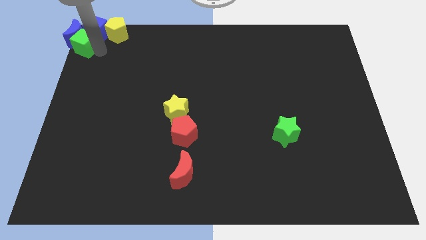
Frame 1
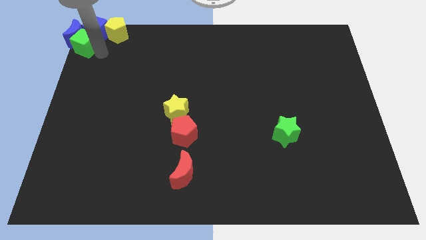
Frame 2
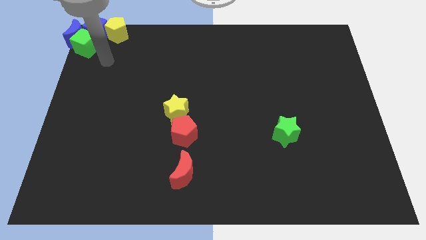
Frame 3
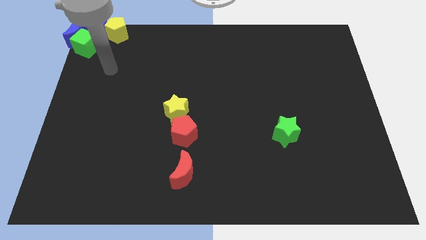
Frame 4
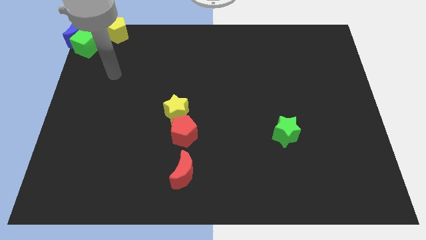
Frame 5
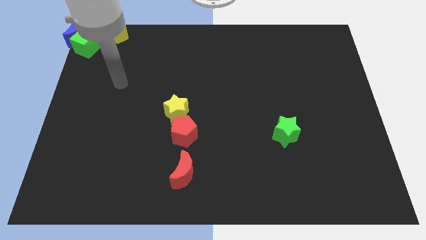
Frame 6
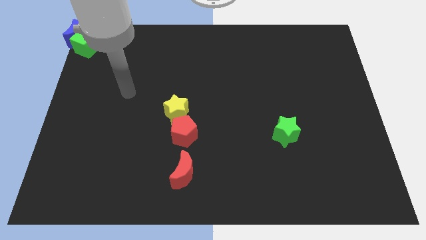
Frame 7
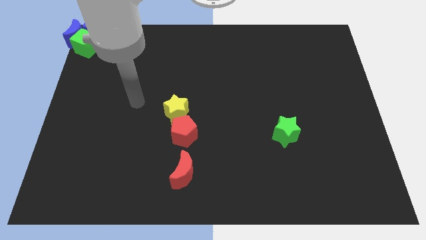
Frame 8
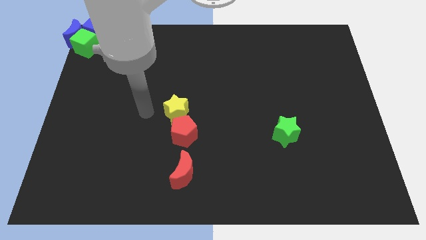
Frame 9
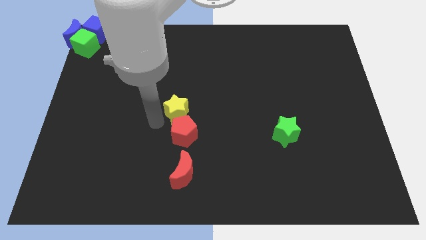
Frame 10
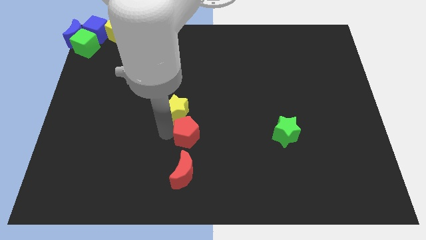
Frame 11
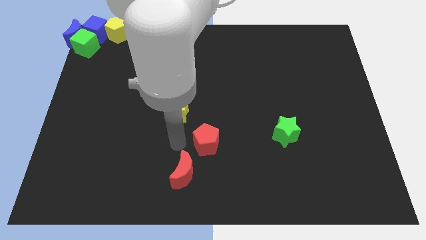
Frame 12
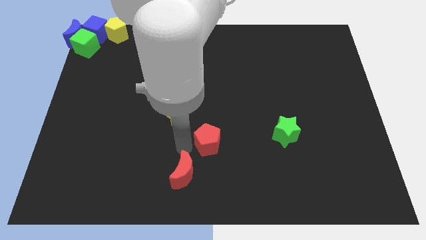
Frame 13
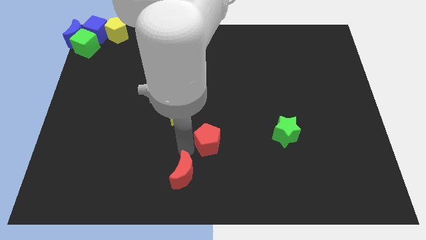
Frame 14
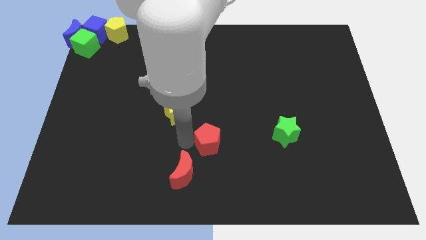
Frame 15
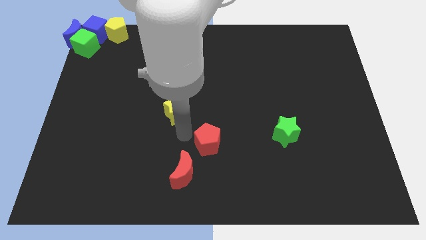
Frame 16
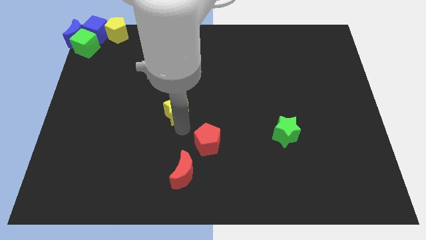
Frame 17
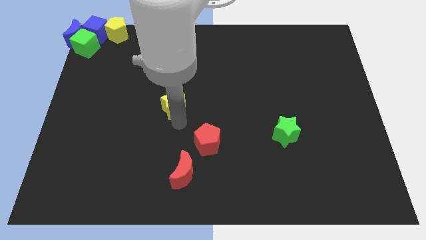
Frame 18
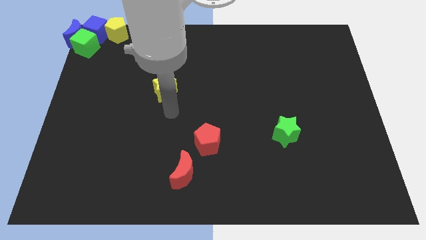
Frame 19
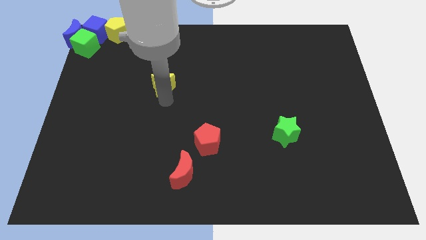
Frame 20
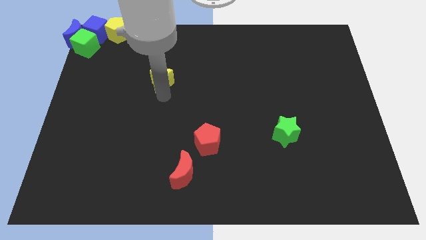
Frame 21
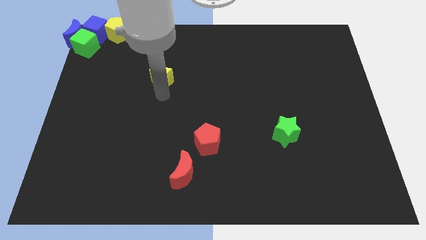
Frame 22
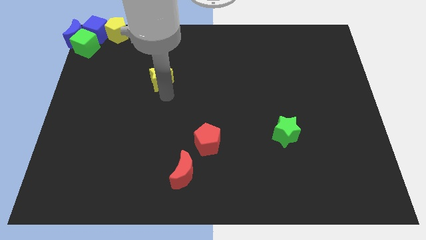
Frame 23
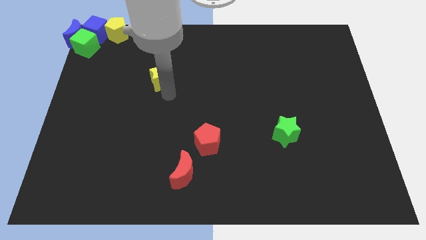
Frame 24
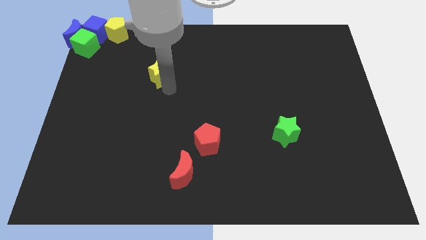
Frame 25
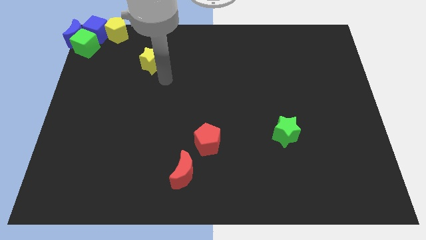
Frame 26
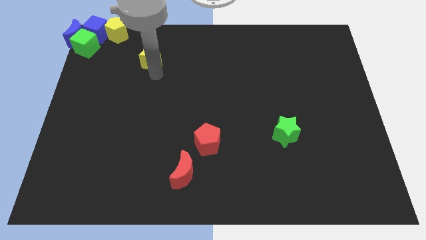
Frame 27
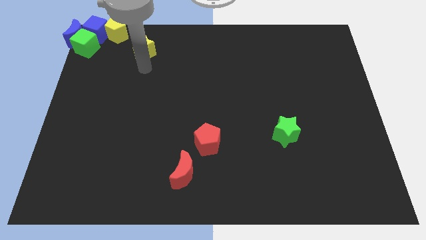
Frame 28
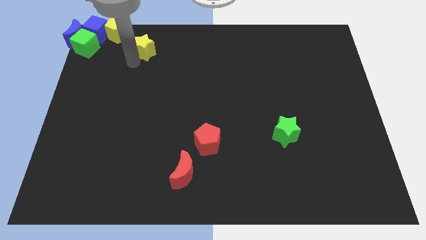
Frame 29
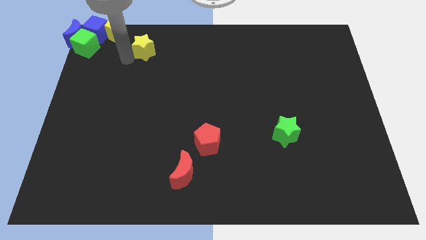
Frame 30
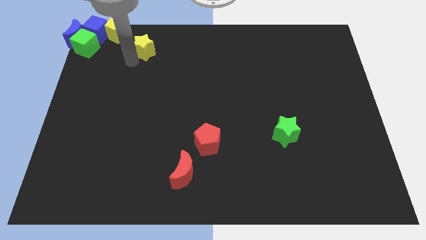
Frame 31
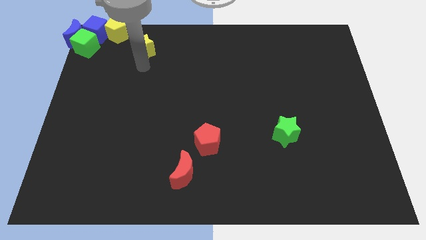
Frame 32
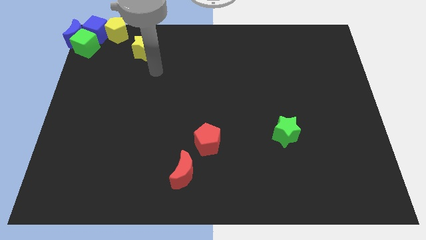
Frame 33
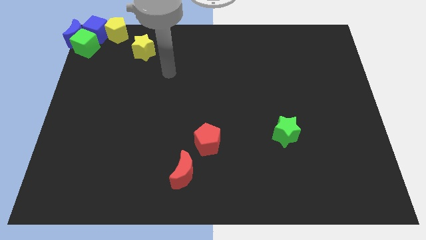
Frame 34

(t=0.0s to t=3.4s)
push the red pentagon and yellow star in opposite directions

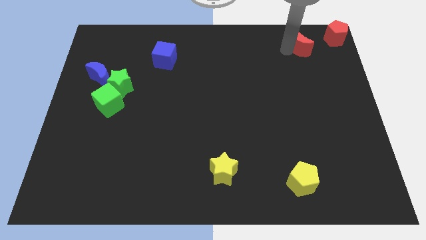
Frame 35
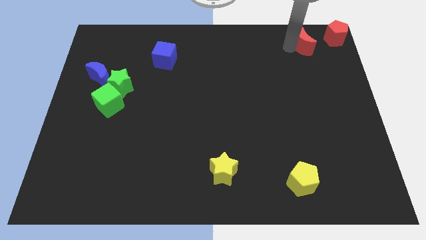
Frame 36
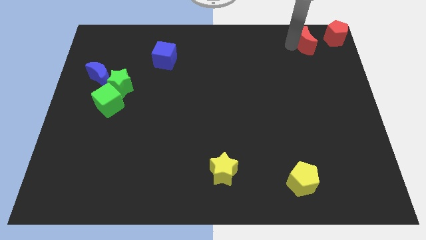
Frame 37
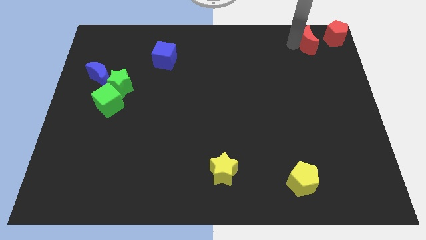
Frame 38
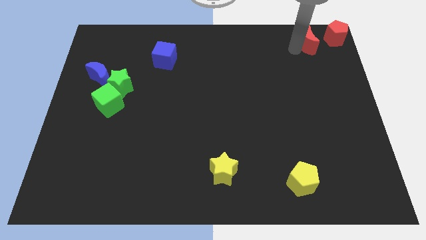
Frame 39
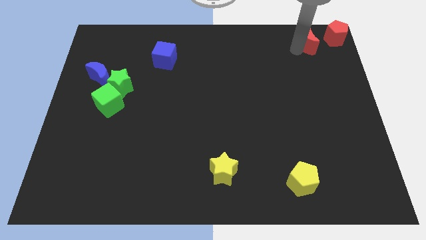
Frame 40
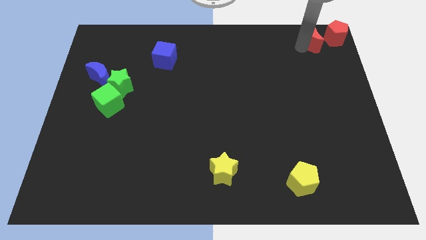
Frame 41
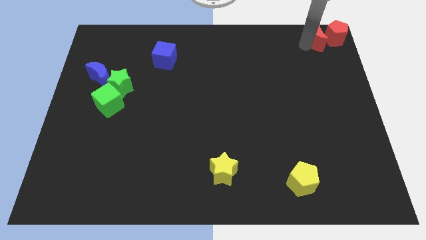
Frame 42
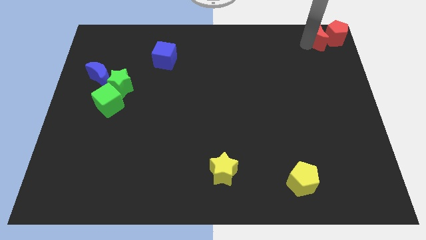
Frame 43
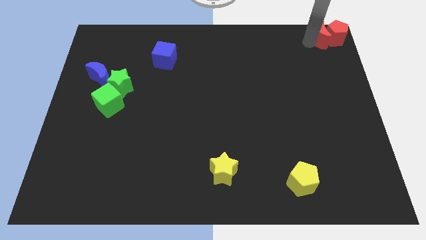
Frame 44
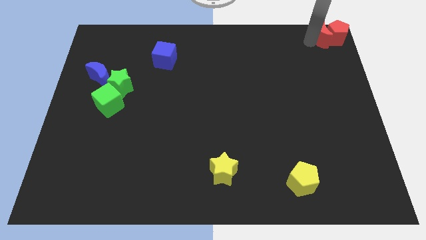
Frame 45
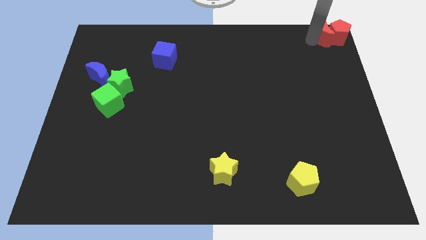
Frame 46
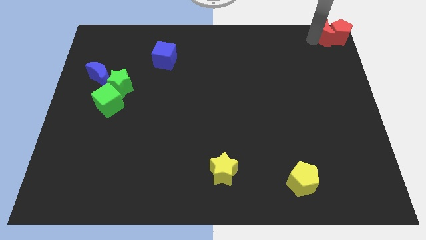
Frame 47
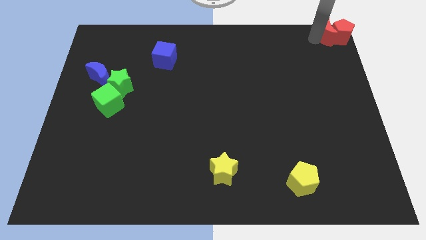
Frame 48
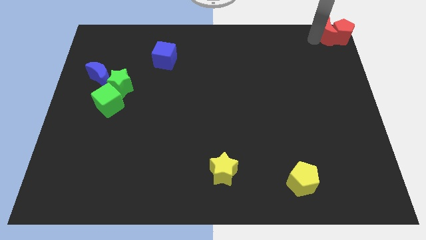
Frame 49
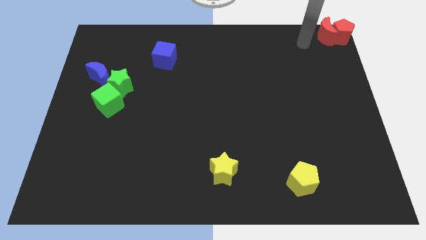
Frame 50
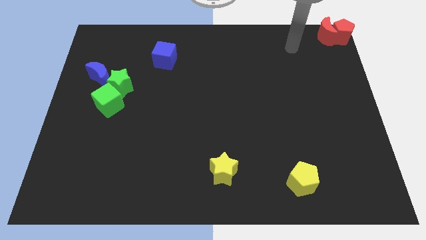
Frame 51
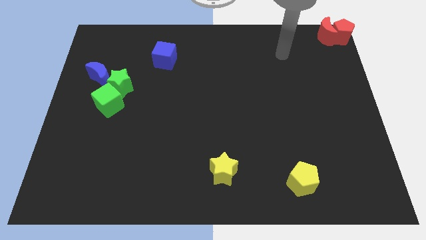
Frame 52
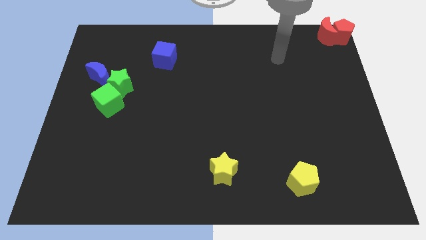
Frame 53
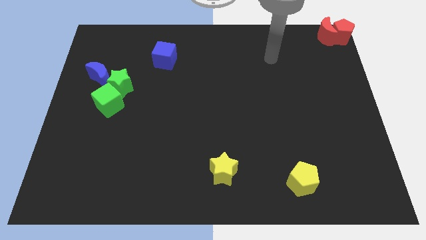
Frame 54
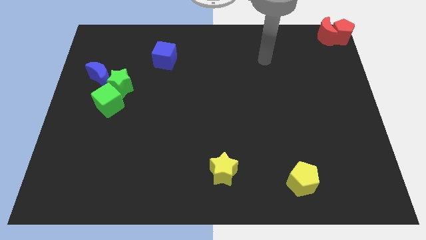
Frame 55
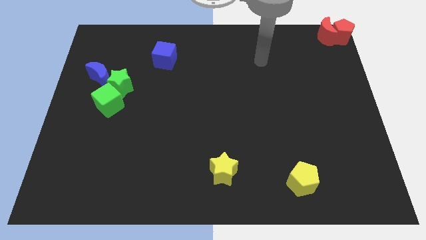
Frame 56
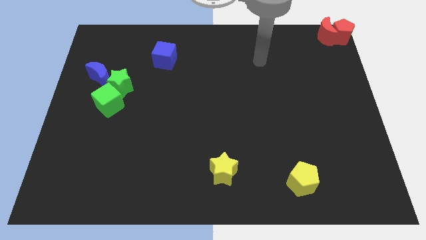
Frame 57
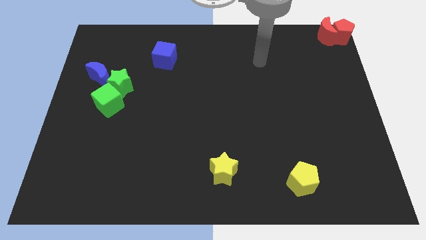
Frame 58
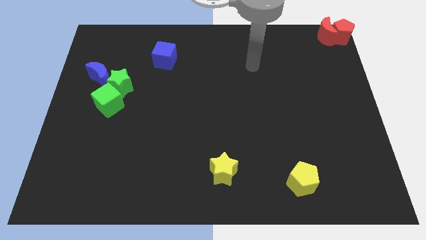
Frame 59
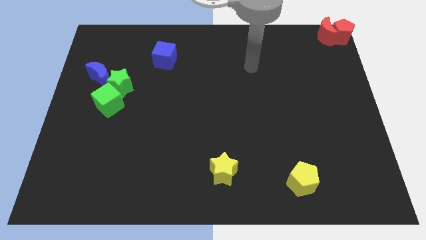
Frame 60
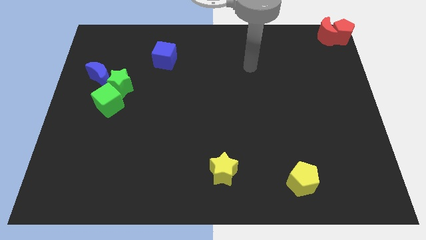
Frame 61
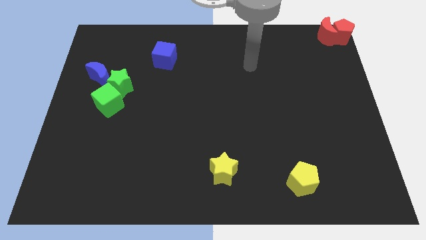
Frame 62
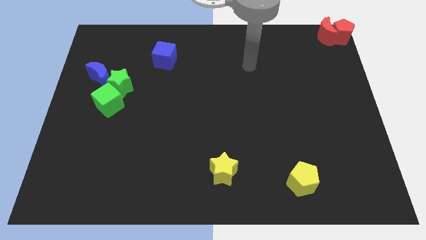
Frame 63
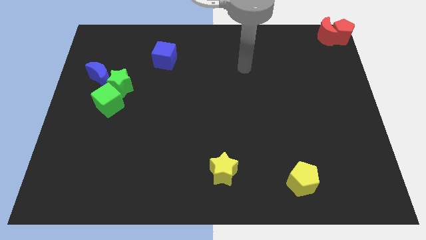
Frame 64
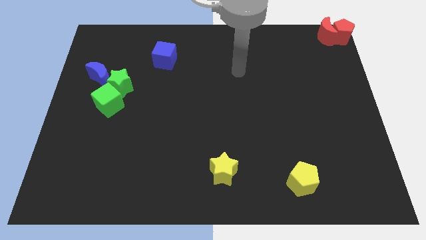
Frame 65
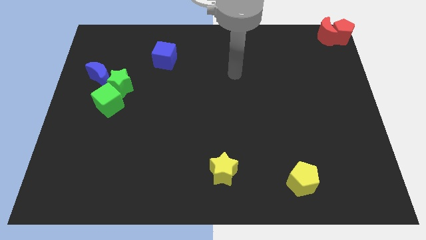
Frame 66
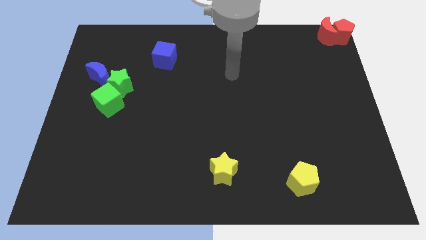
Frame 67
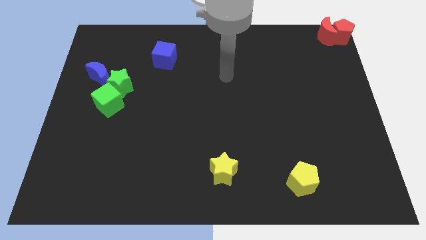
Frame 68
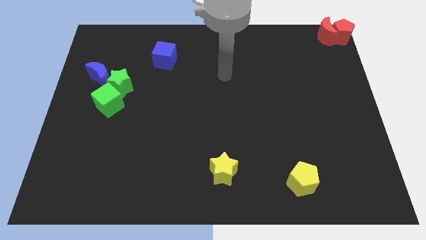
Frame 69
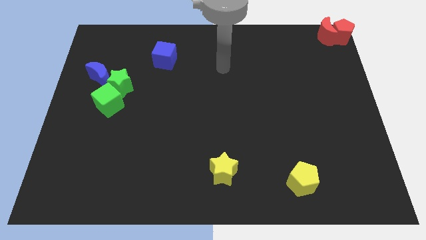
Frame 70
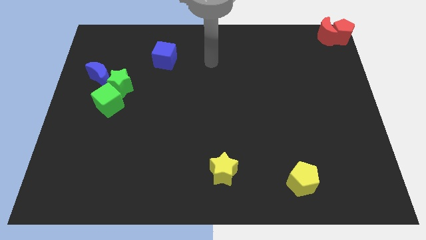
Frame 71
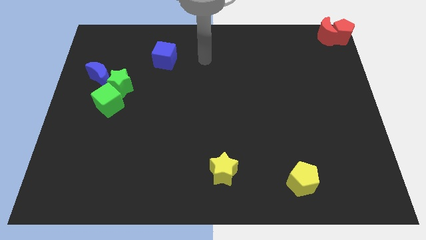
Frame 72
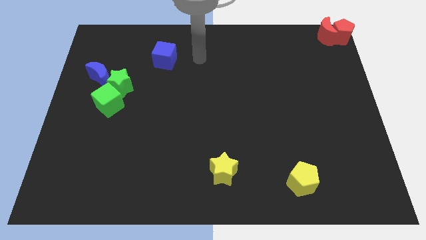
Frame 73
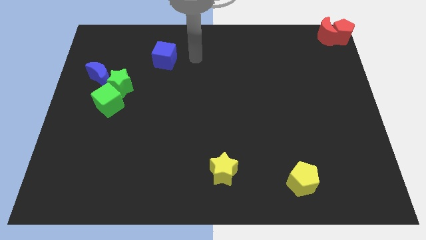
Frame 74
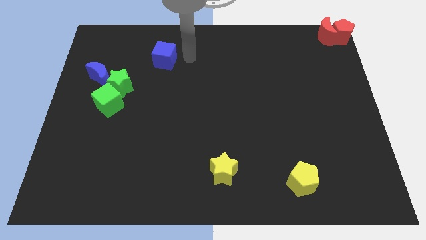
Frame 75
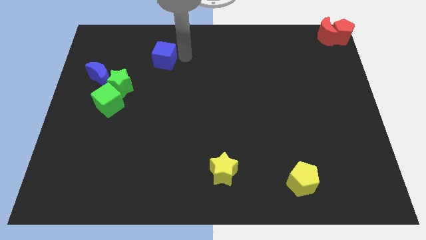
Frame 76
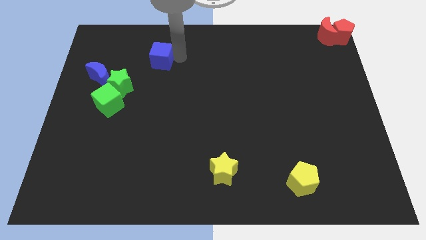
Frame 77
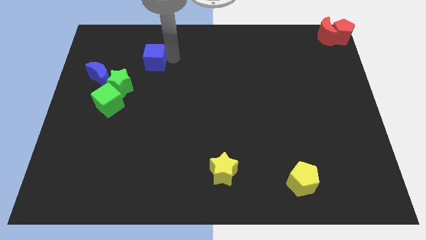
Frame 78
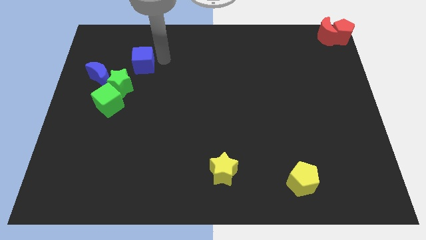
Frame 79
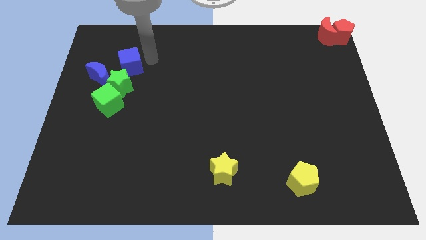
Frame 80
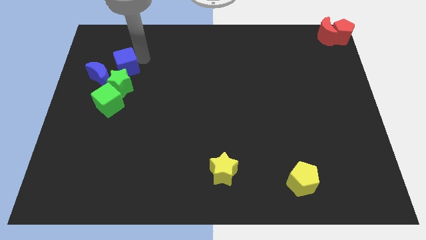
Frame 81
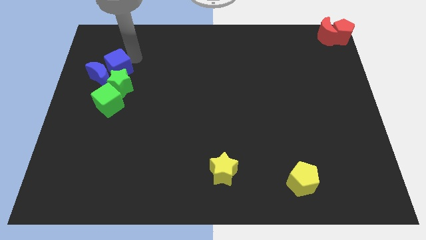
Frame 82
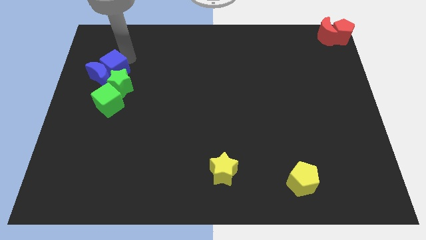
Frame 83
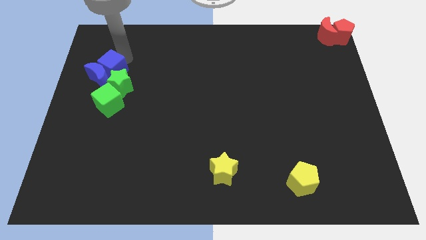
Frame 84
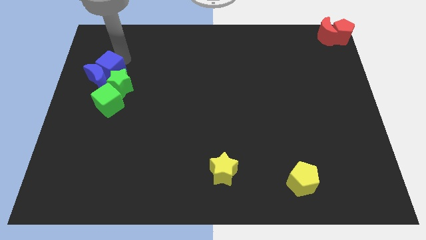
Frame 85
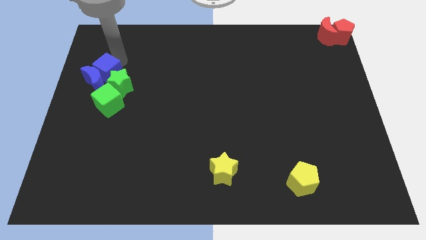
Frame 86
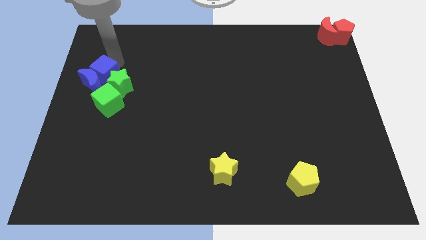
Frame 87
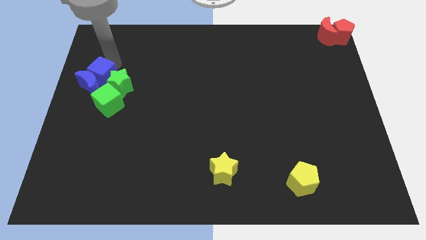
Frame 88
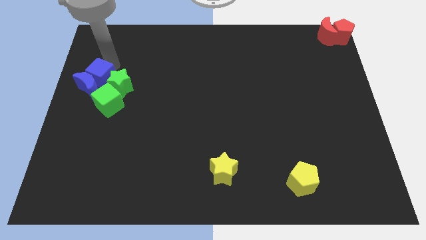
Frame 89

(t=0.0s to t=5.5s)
push the blue cube into the blue crescent
